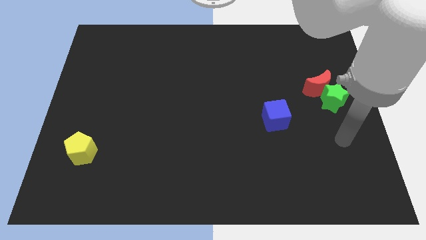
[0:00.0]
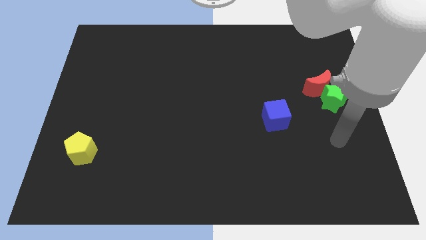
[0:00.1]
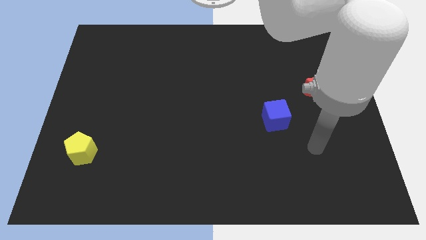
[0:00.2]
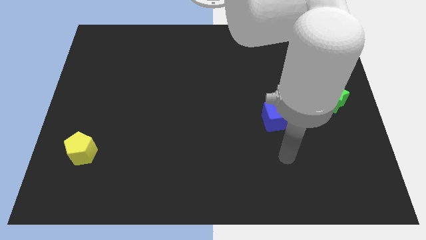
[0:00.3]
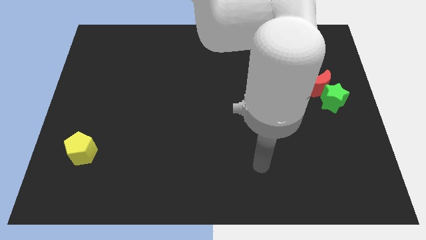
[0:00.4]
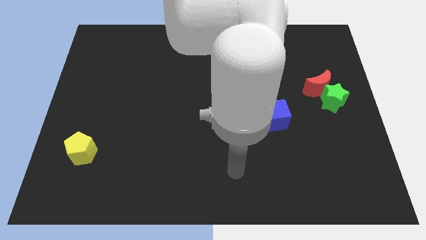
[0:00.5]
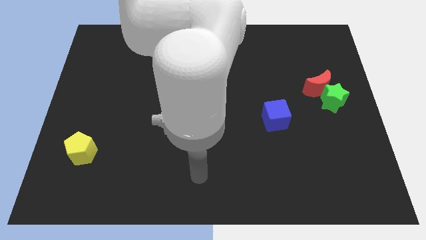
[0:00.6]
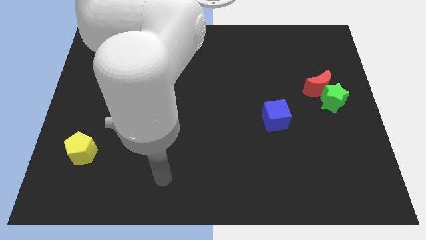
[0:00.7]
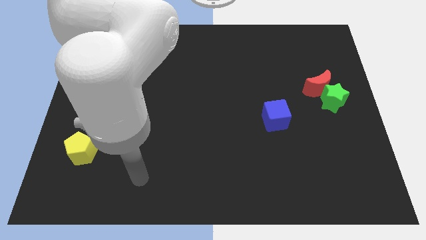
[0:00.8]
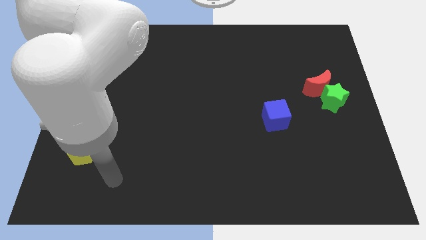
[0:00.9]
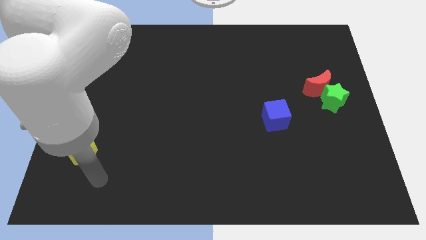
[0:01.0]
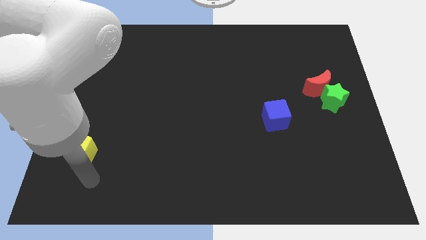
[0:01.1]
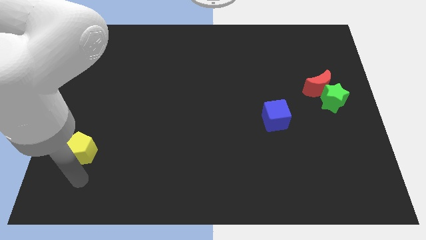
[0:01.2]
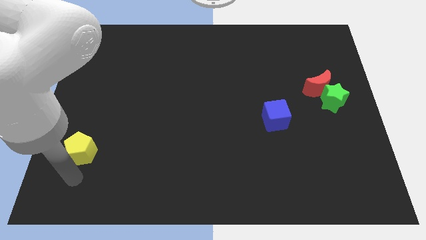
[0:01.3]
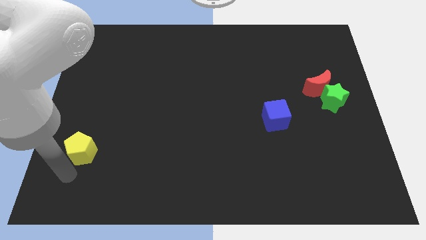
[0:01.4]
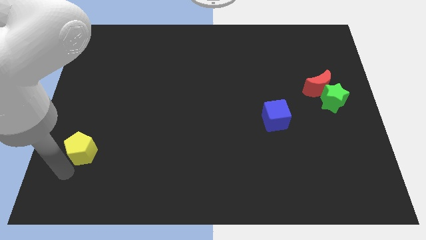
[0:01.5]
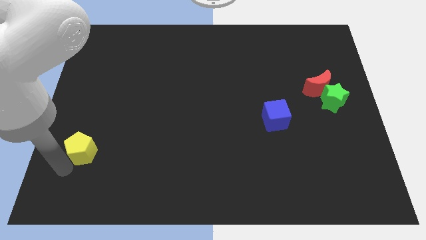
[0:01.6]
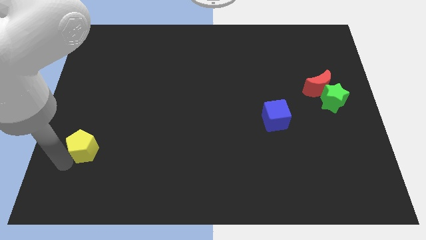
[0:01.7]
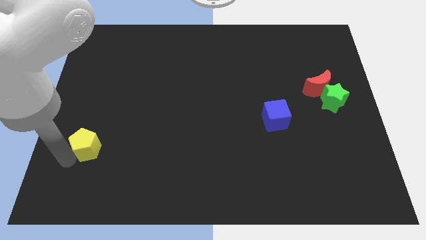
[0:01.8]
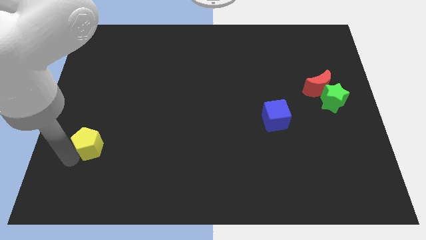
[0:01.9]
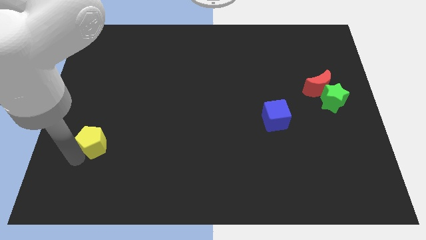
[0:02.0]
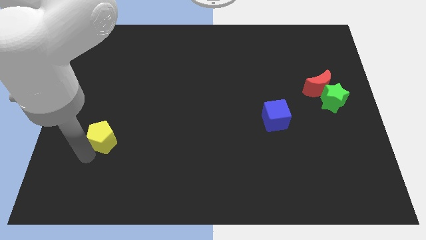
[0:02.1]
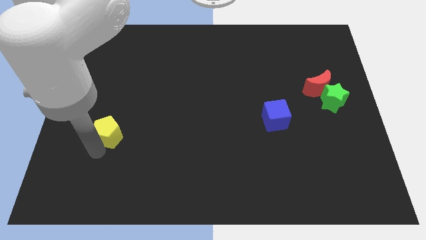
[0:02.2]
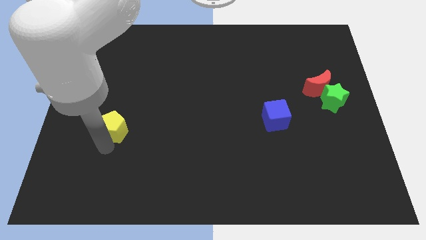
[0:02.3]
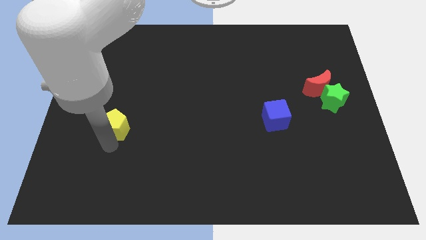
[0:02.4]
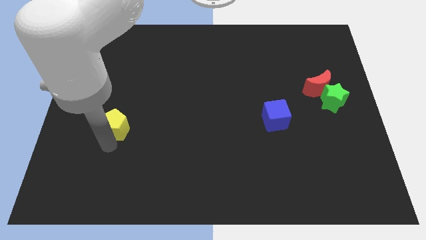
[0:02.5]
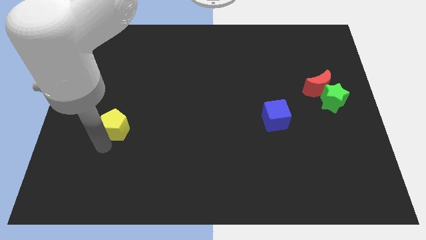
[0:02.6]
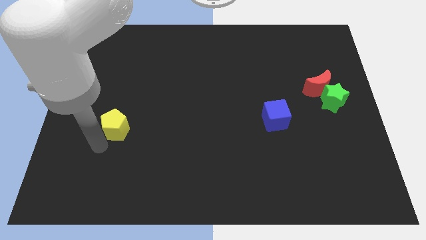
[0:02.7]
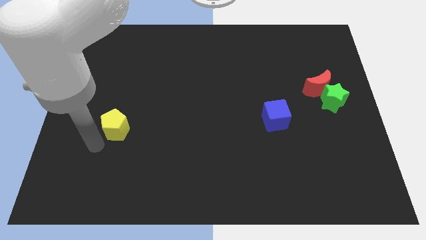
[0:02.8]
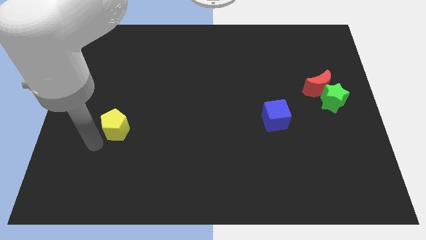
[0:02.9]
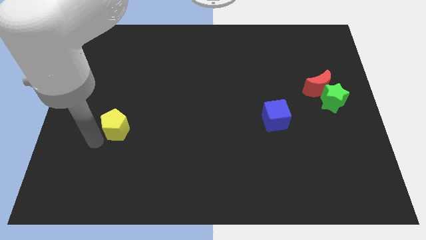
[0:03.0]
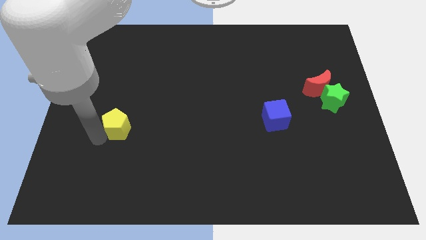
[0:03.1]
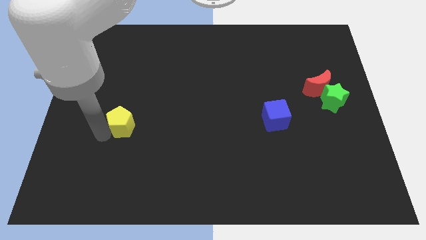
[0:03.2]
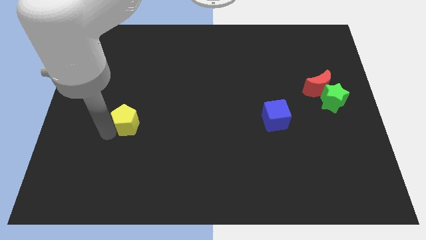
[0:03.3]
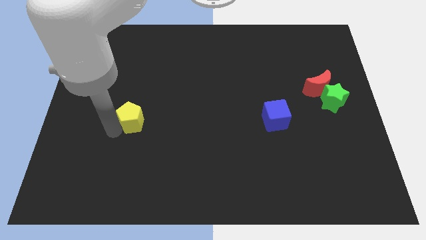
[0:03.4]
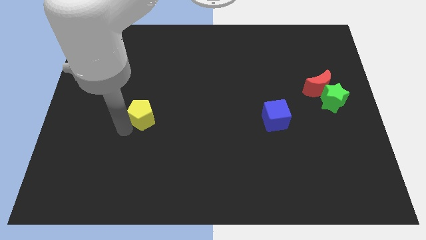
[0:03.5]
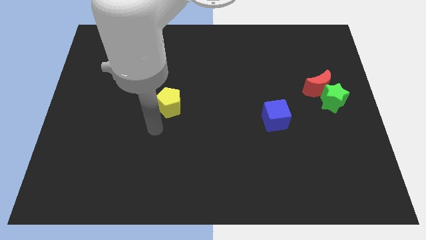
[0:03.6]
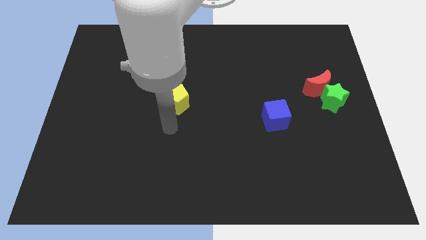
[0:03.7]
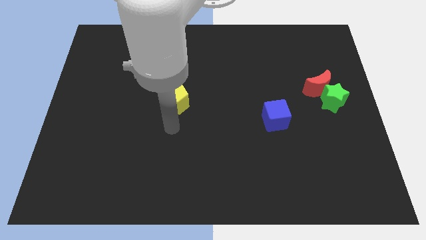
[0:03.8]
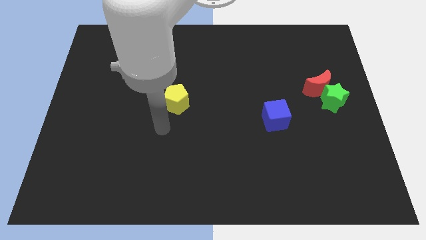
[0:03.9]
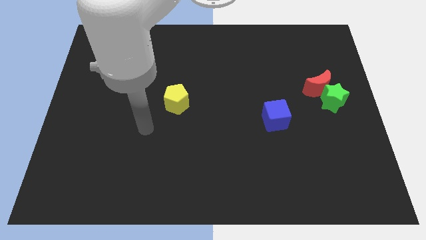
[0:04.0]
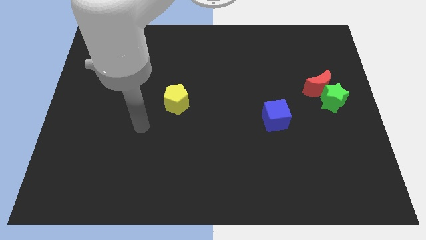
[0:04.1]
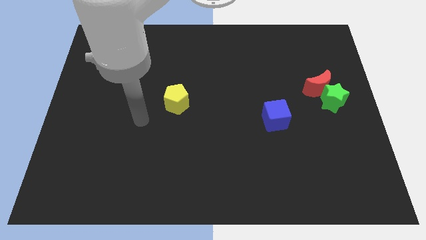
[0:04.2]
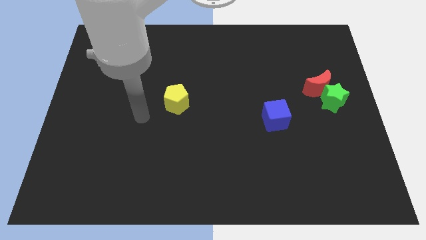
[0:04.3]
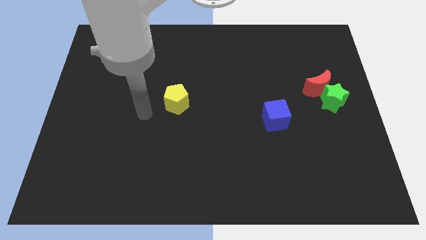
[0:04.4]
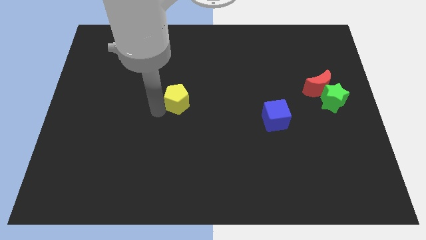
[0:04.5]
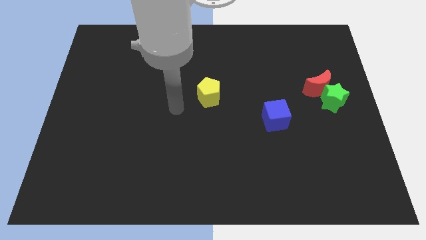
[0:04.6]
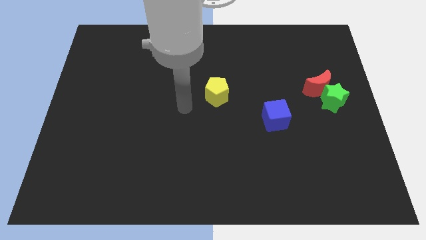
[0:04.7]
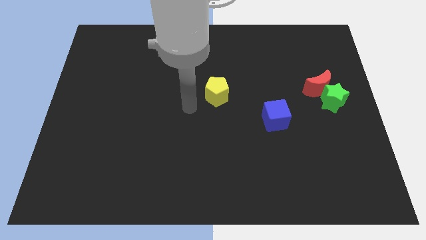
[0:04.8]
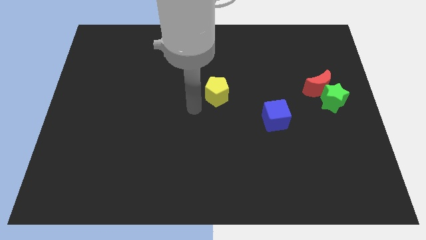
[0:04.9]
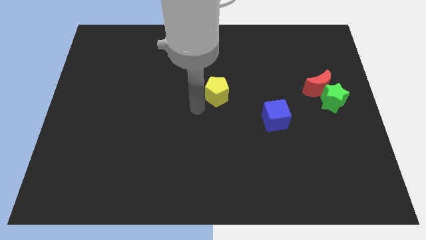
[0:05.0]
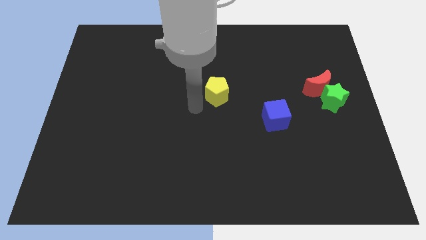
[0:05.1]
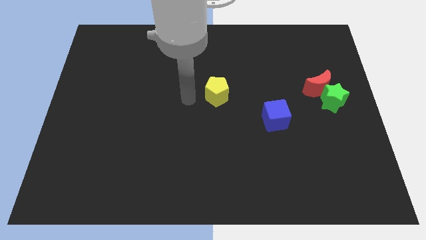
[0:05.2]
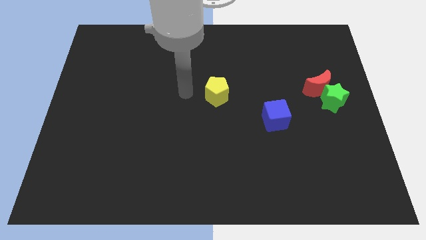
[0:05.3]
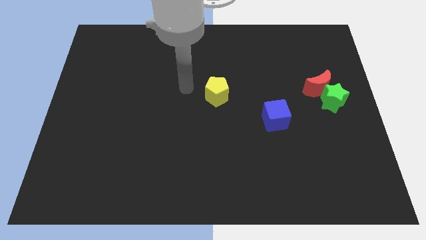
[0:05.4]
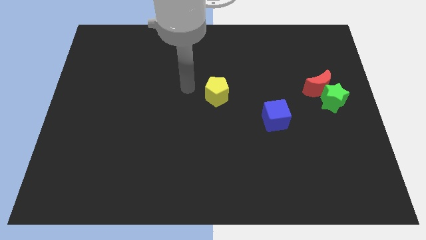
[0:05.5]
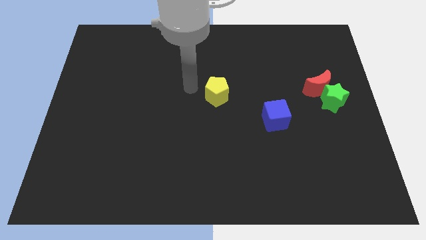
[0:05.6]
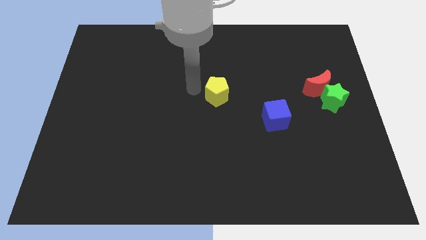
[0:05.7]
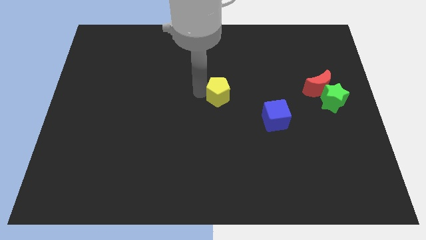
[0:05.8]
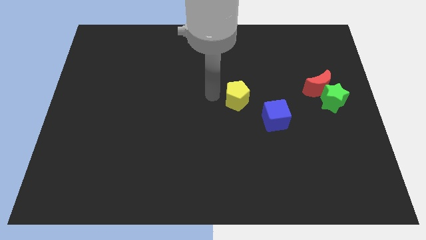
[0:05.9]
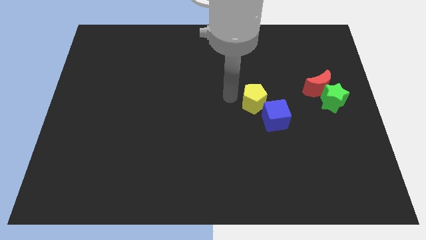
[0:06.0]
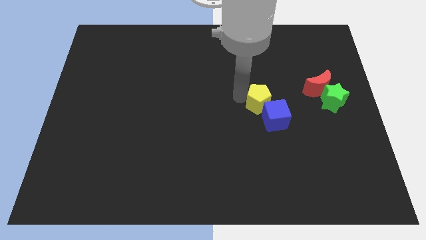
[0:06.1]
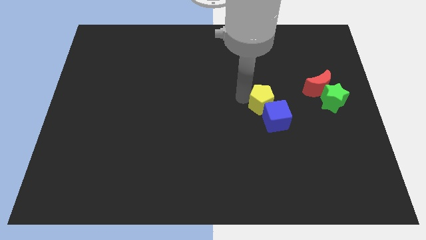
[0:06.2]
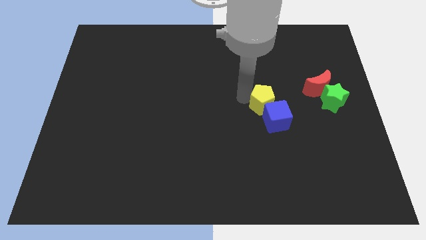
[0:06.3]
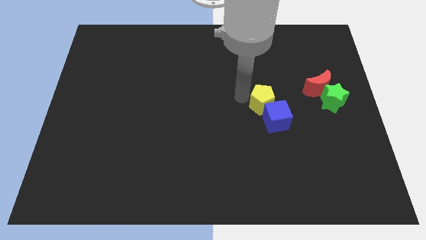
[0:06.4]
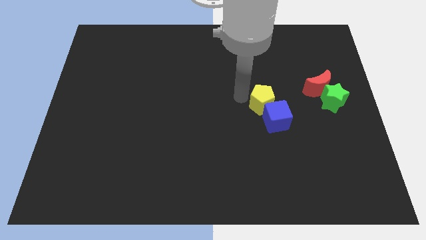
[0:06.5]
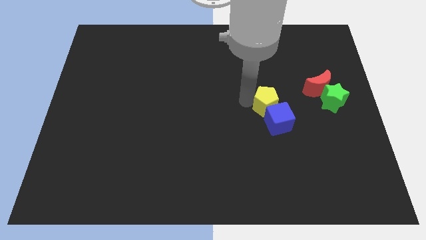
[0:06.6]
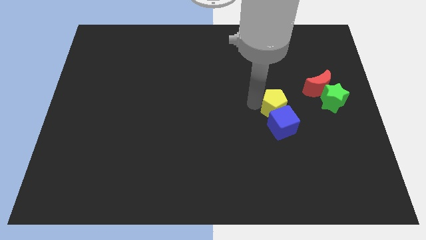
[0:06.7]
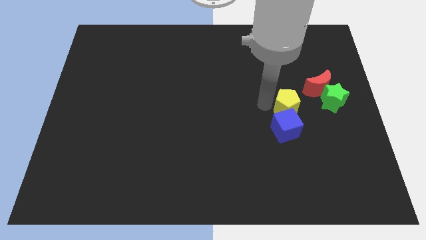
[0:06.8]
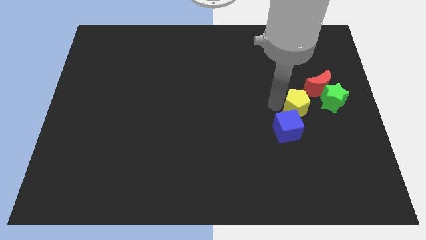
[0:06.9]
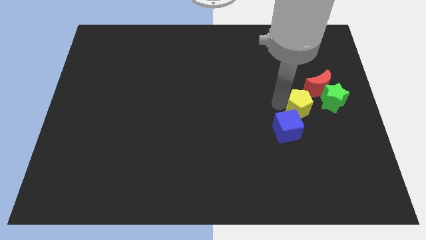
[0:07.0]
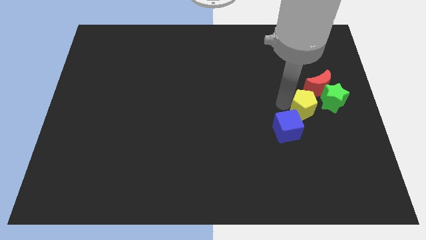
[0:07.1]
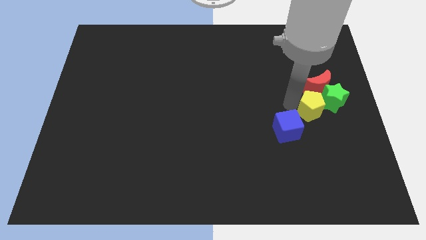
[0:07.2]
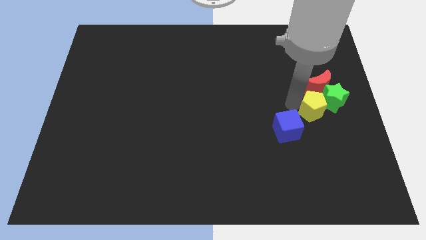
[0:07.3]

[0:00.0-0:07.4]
put the pentagon towards the star

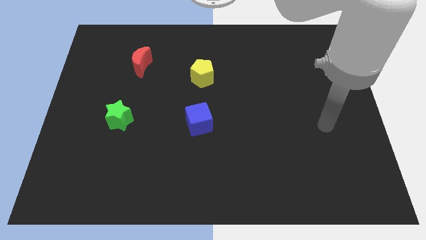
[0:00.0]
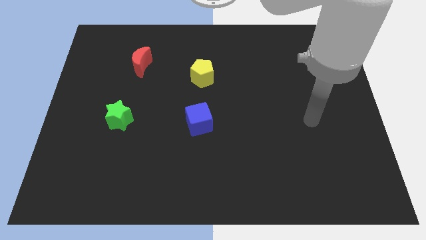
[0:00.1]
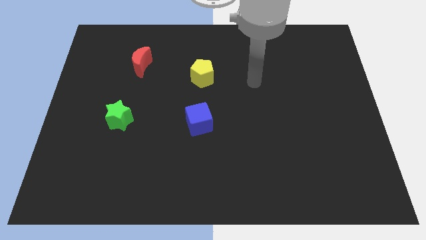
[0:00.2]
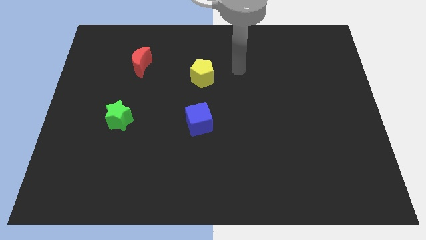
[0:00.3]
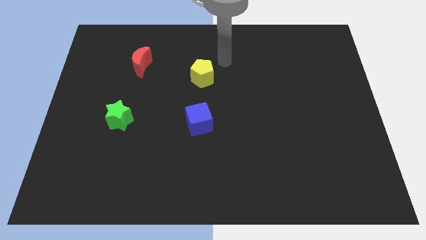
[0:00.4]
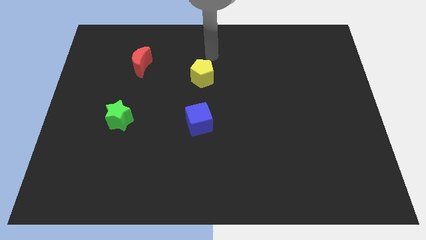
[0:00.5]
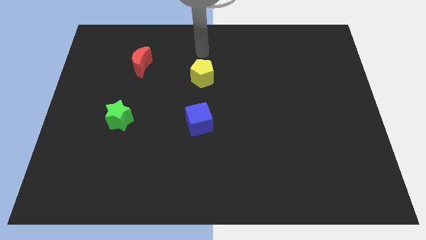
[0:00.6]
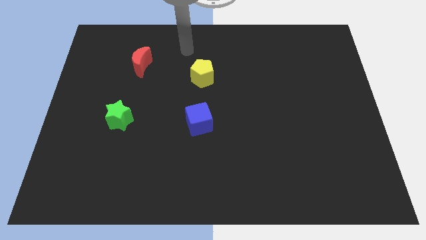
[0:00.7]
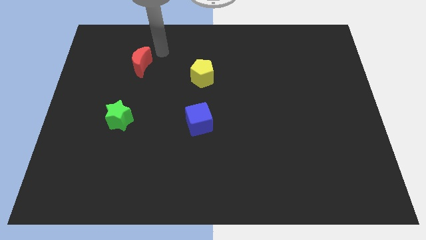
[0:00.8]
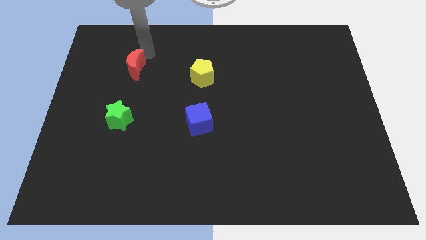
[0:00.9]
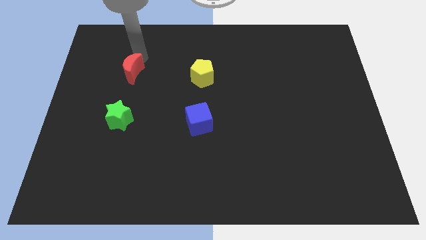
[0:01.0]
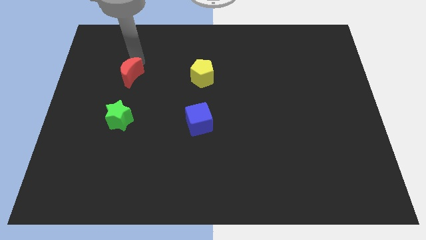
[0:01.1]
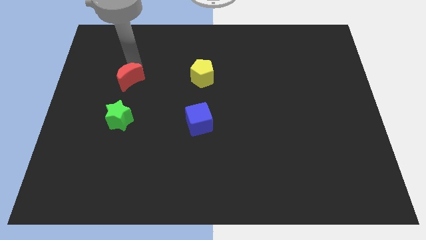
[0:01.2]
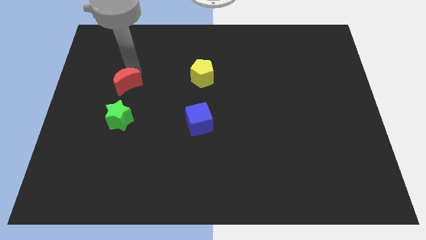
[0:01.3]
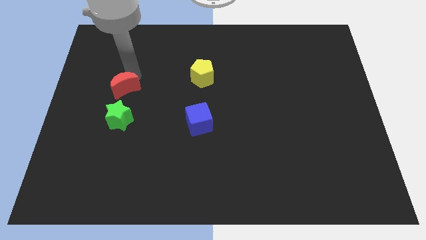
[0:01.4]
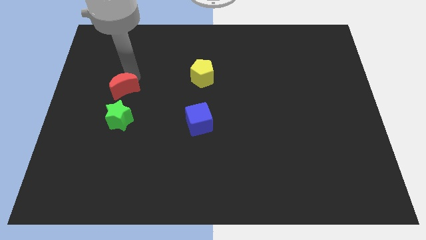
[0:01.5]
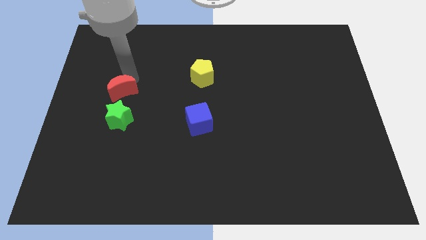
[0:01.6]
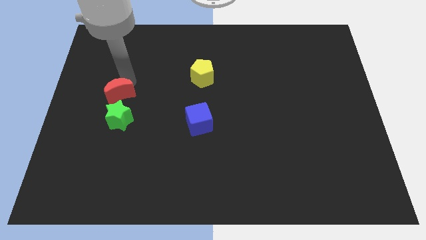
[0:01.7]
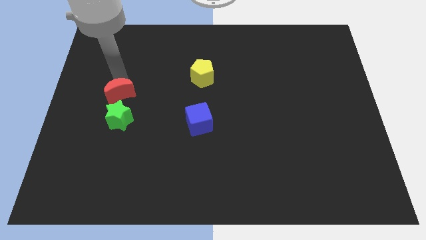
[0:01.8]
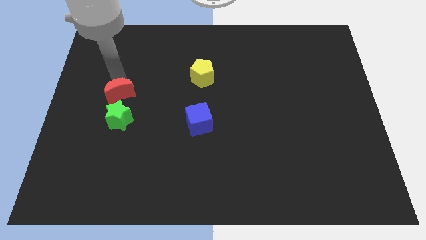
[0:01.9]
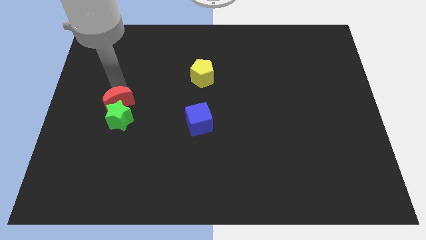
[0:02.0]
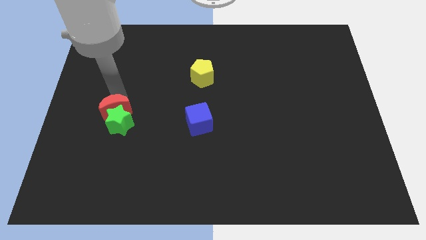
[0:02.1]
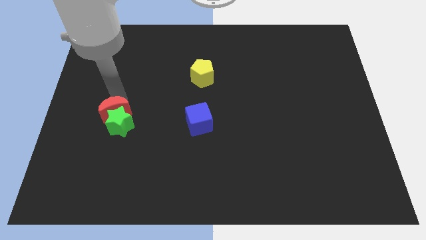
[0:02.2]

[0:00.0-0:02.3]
move the red moon towards the green block
